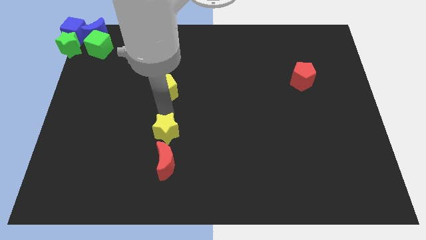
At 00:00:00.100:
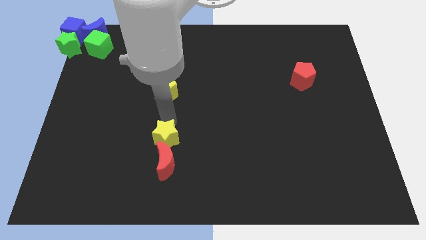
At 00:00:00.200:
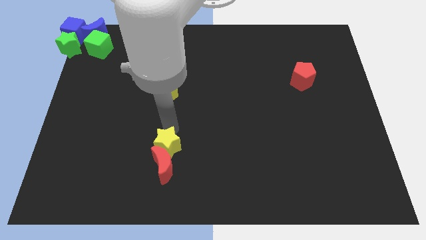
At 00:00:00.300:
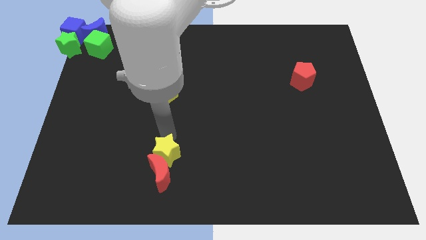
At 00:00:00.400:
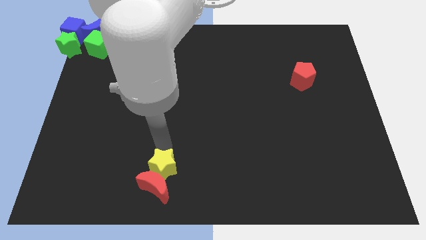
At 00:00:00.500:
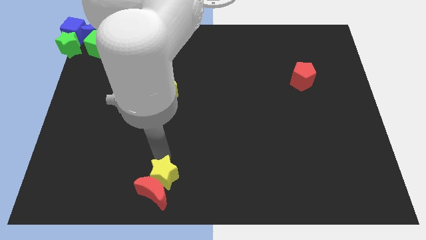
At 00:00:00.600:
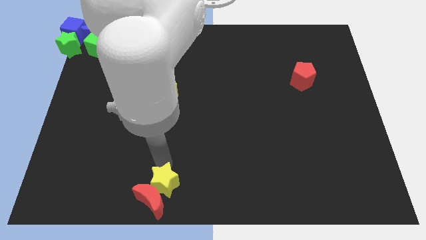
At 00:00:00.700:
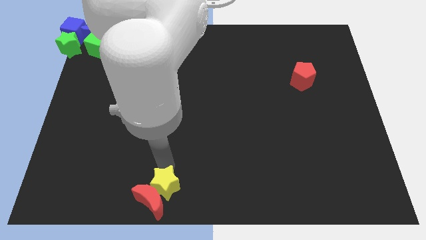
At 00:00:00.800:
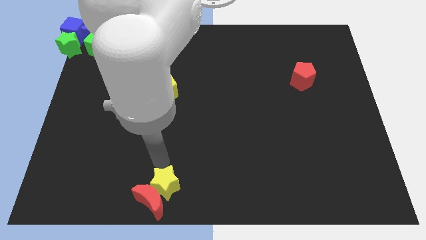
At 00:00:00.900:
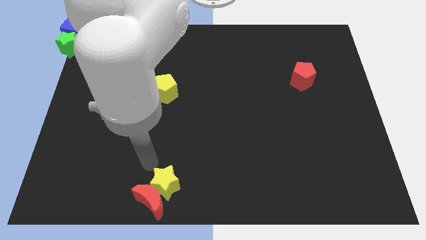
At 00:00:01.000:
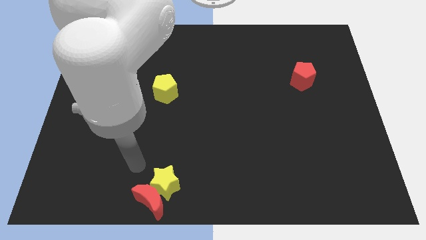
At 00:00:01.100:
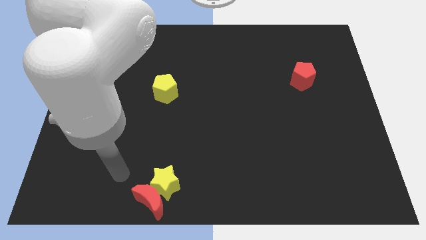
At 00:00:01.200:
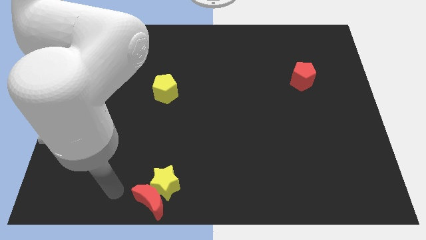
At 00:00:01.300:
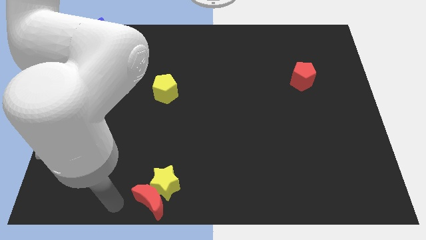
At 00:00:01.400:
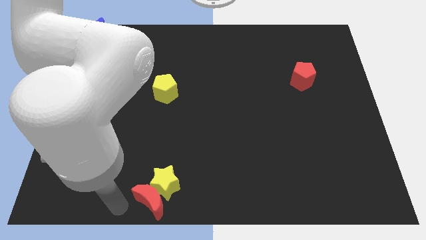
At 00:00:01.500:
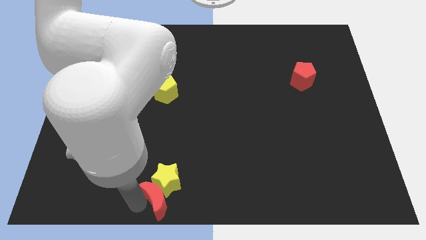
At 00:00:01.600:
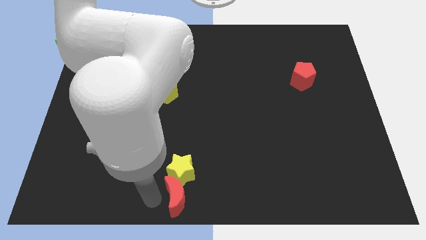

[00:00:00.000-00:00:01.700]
push the yellow star into the red crescent

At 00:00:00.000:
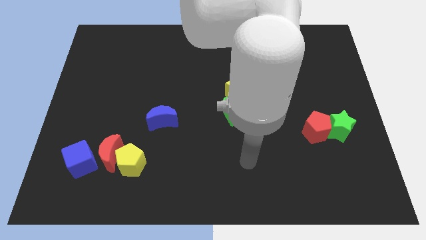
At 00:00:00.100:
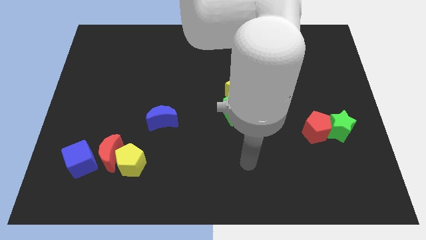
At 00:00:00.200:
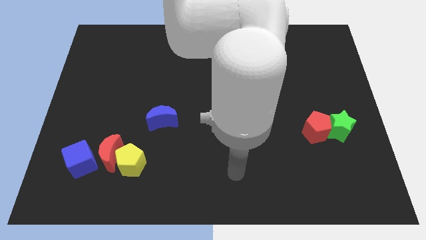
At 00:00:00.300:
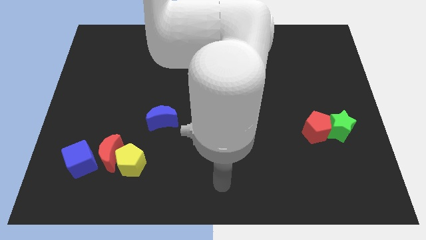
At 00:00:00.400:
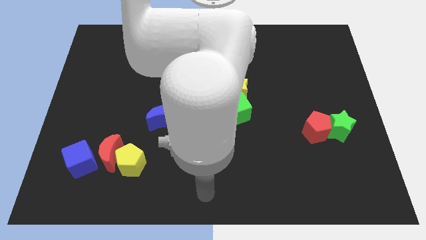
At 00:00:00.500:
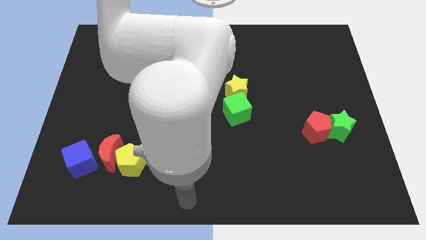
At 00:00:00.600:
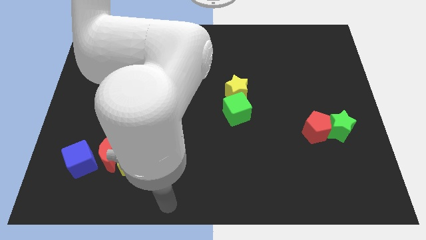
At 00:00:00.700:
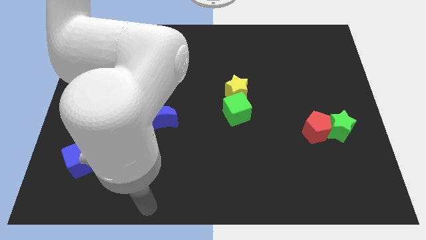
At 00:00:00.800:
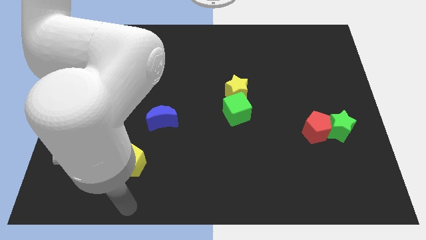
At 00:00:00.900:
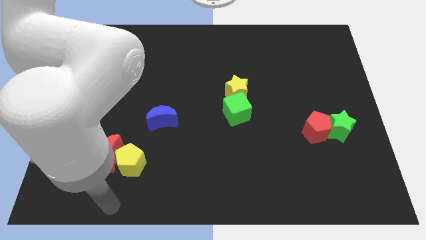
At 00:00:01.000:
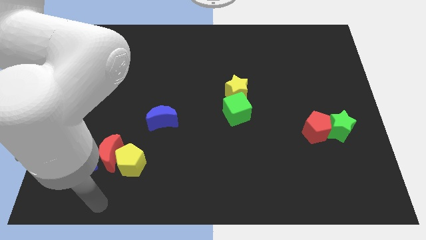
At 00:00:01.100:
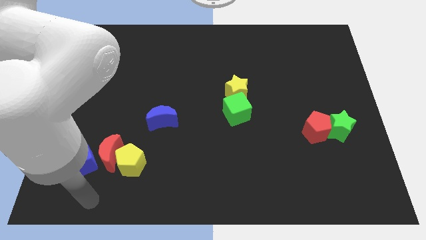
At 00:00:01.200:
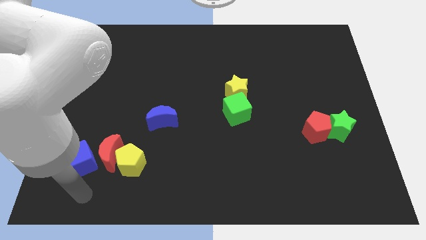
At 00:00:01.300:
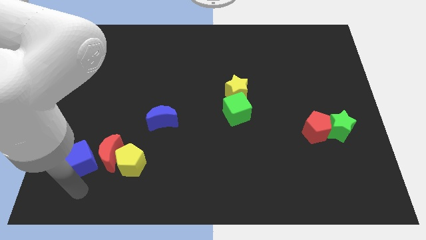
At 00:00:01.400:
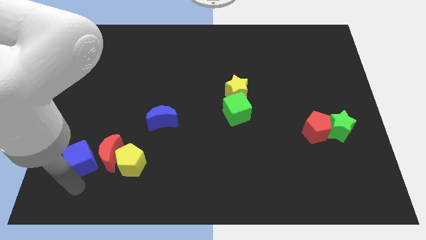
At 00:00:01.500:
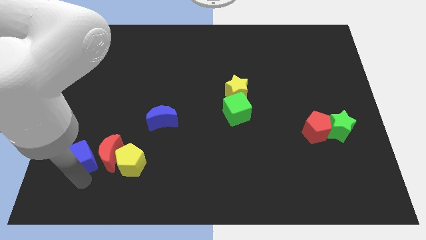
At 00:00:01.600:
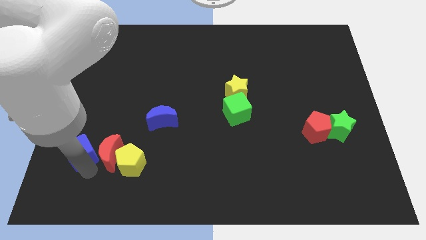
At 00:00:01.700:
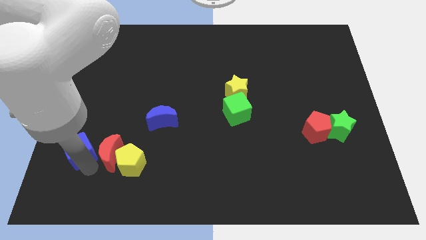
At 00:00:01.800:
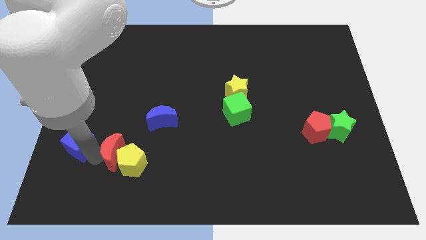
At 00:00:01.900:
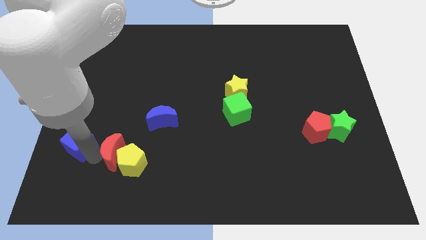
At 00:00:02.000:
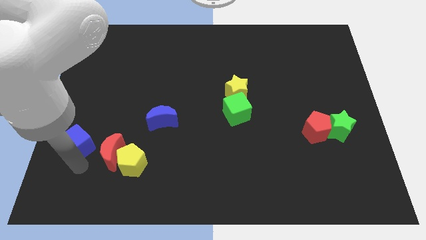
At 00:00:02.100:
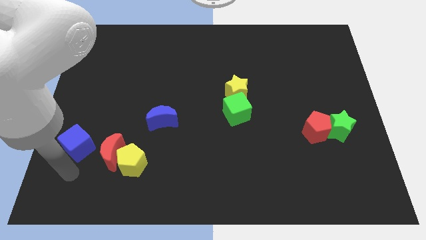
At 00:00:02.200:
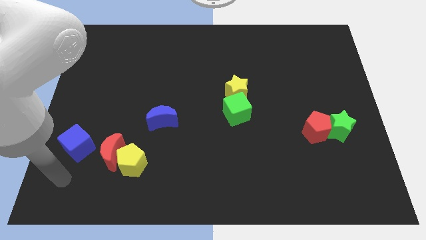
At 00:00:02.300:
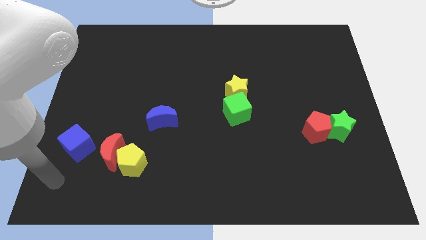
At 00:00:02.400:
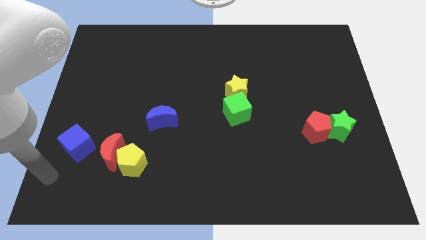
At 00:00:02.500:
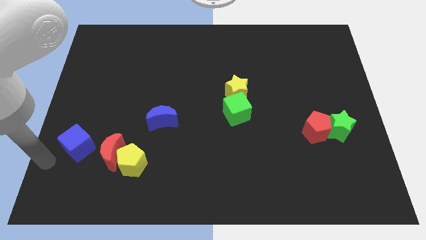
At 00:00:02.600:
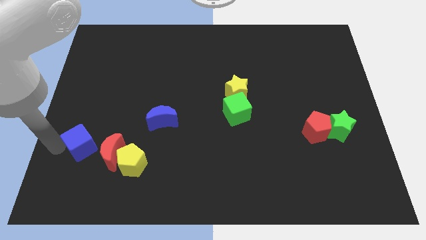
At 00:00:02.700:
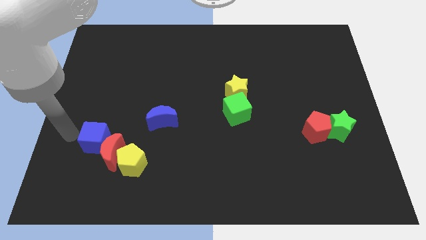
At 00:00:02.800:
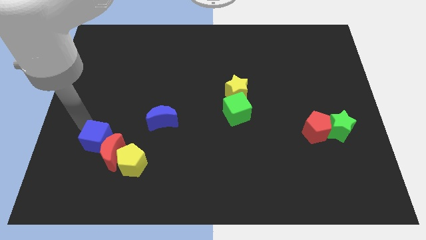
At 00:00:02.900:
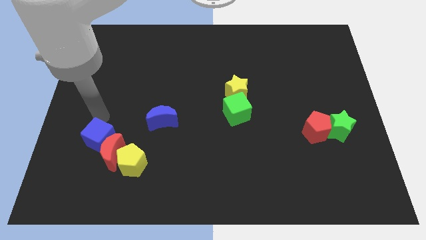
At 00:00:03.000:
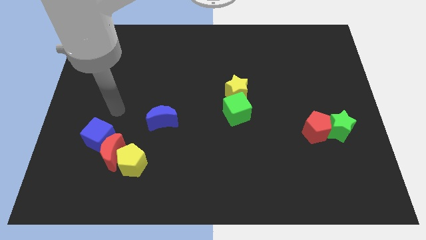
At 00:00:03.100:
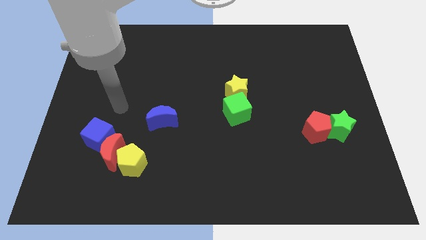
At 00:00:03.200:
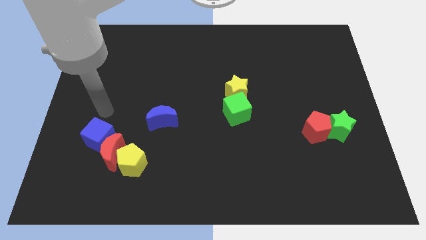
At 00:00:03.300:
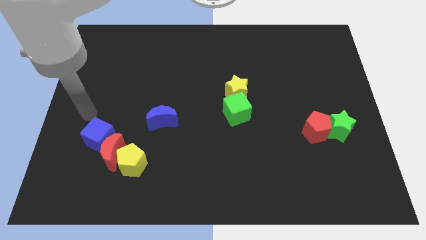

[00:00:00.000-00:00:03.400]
push the blue cube into the red crescent

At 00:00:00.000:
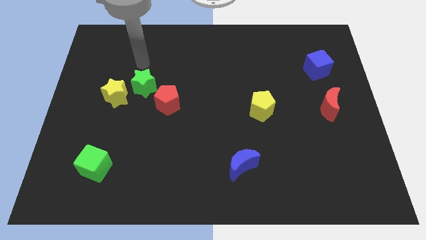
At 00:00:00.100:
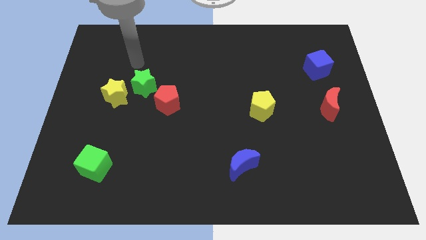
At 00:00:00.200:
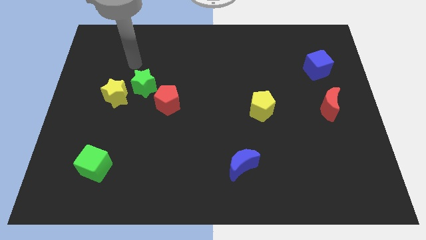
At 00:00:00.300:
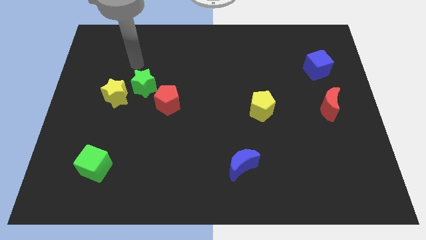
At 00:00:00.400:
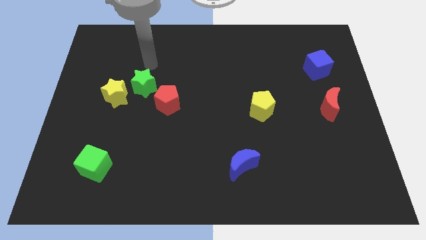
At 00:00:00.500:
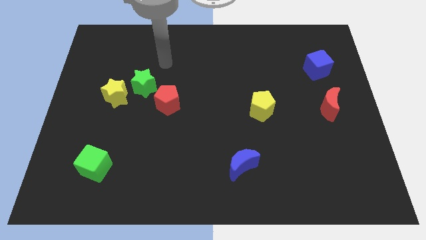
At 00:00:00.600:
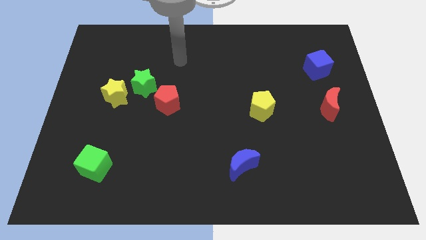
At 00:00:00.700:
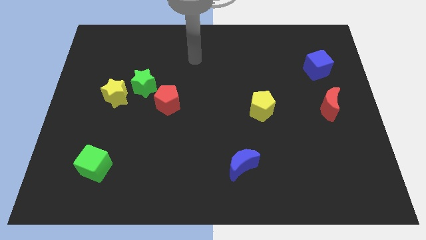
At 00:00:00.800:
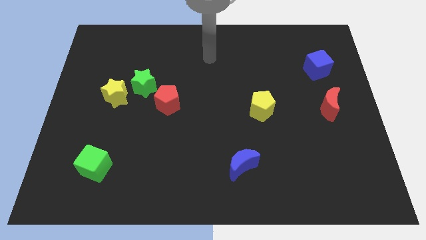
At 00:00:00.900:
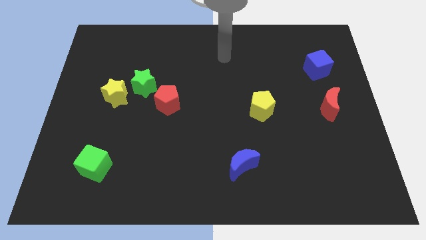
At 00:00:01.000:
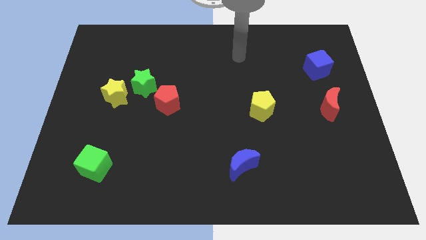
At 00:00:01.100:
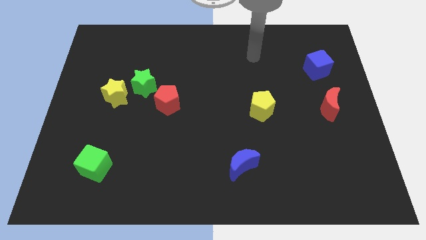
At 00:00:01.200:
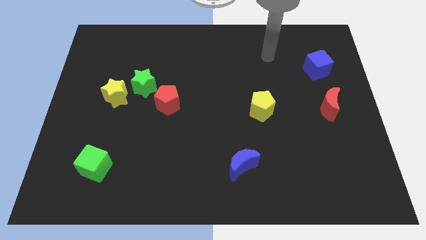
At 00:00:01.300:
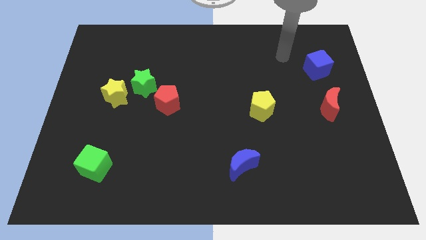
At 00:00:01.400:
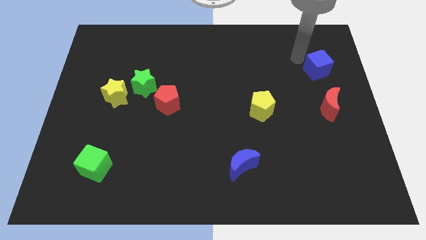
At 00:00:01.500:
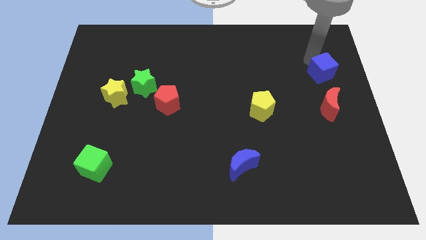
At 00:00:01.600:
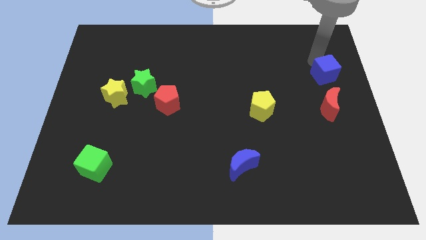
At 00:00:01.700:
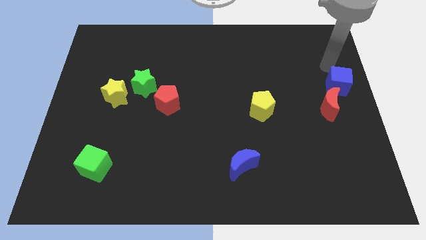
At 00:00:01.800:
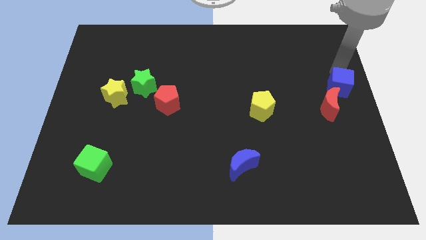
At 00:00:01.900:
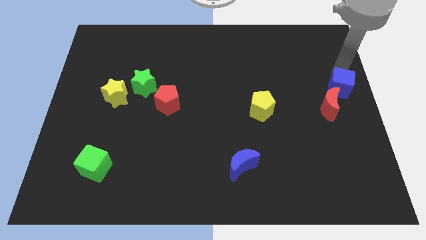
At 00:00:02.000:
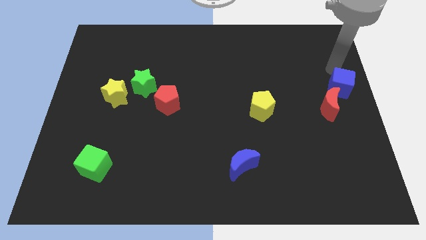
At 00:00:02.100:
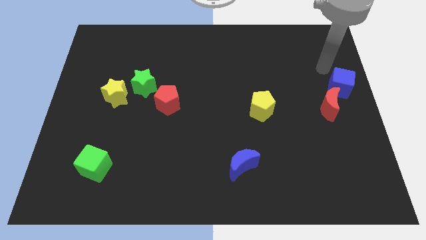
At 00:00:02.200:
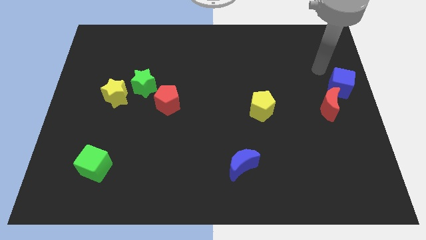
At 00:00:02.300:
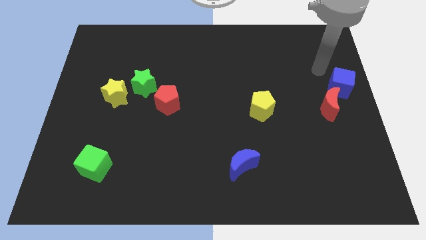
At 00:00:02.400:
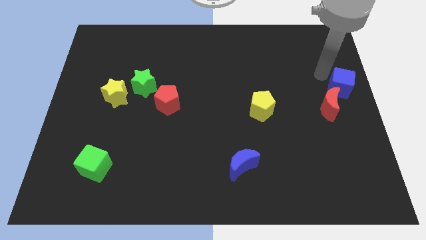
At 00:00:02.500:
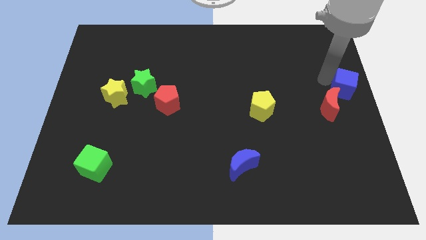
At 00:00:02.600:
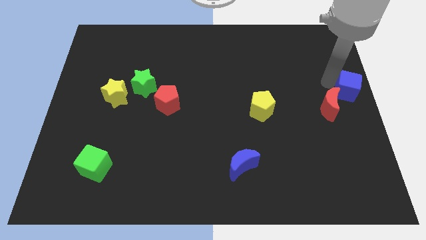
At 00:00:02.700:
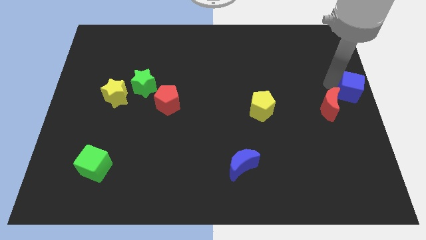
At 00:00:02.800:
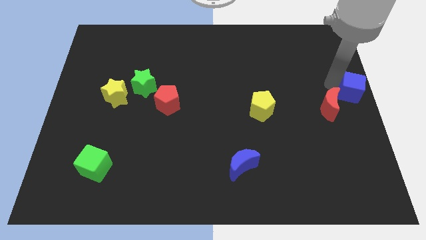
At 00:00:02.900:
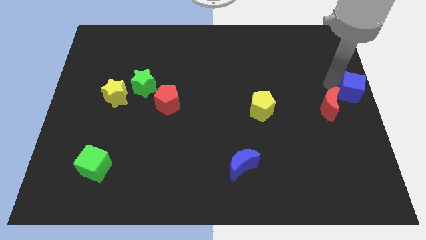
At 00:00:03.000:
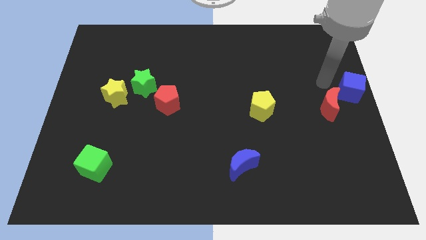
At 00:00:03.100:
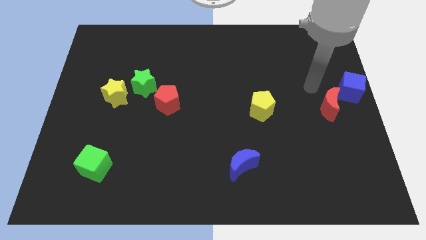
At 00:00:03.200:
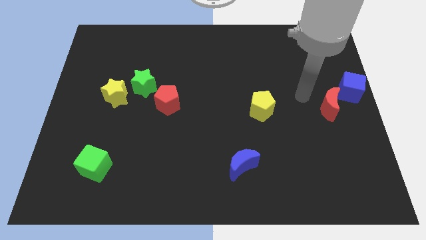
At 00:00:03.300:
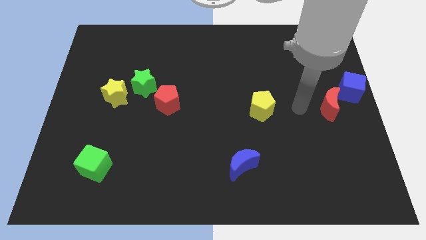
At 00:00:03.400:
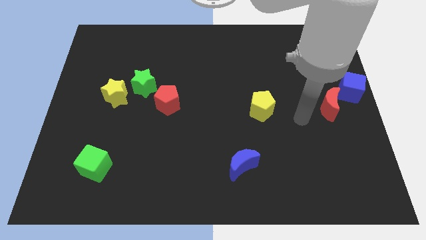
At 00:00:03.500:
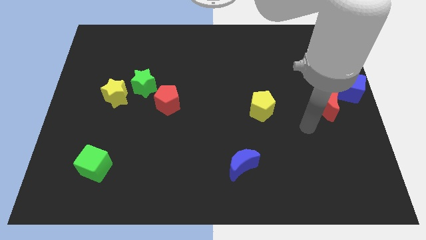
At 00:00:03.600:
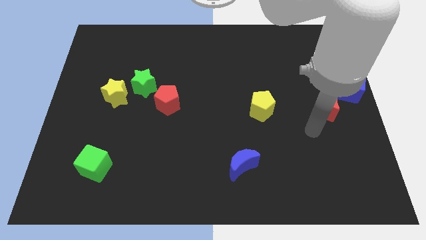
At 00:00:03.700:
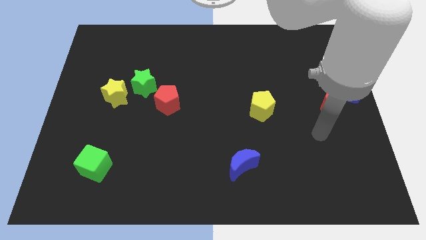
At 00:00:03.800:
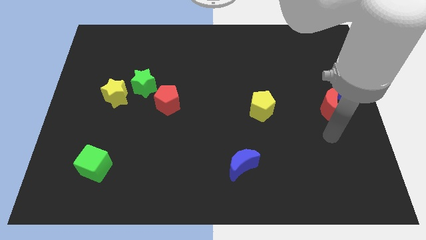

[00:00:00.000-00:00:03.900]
move the blue cube right above the red moon
